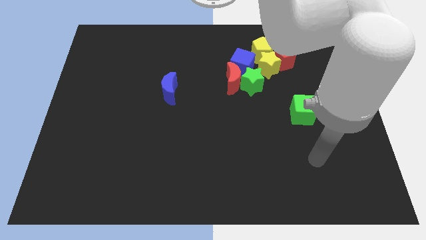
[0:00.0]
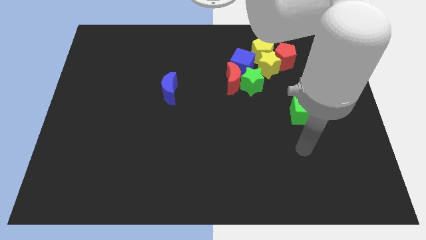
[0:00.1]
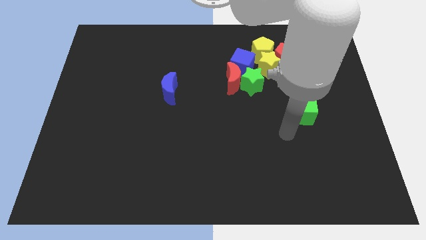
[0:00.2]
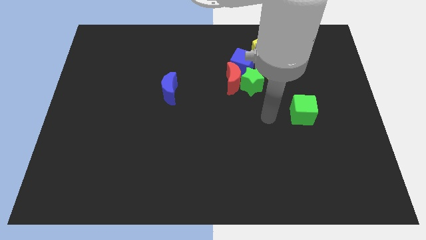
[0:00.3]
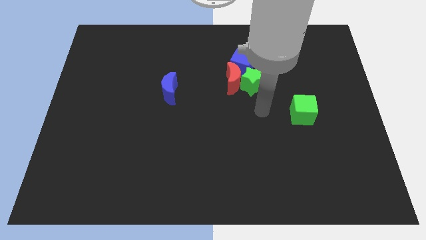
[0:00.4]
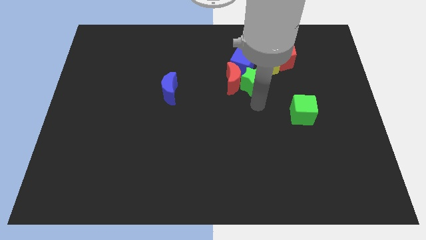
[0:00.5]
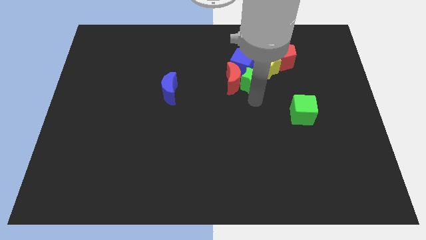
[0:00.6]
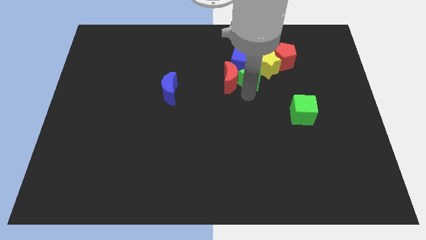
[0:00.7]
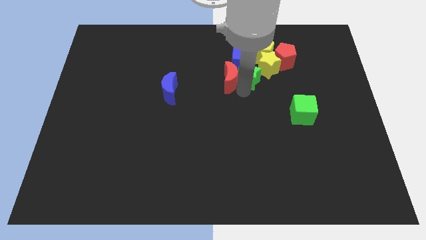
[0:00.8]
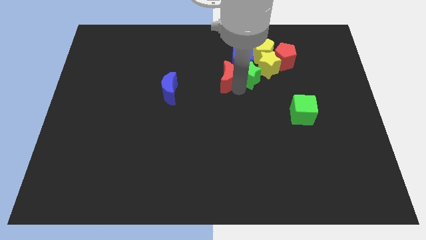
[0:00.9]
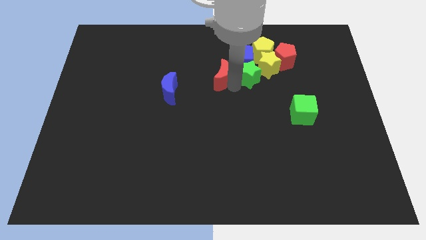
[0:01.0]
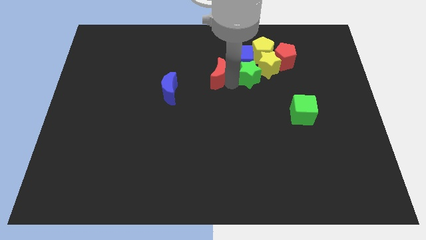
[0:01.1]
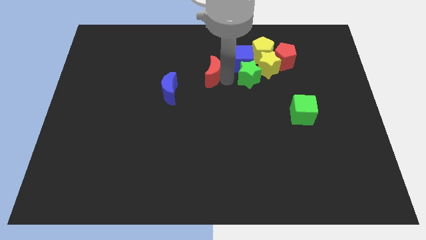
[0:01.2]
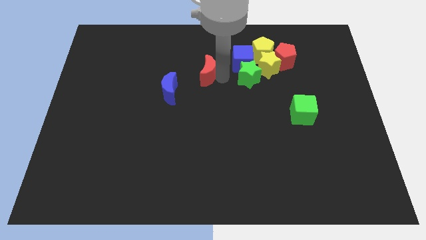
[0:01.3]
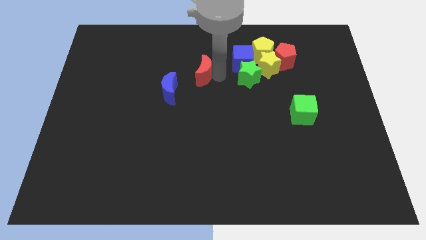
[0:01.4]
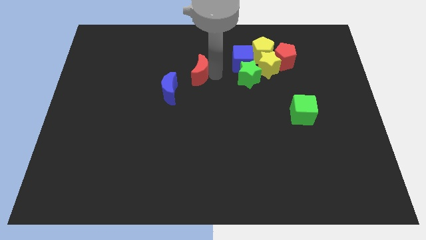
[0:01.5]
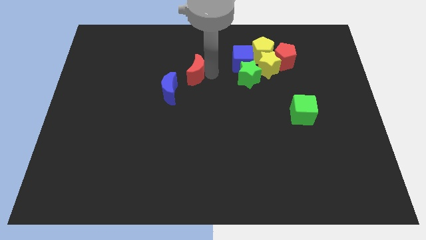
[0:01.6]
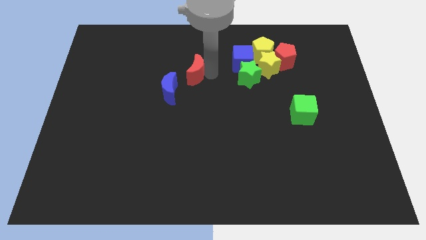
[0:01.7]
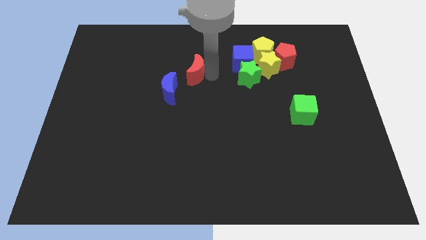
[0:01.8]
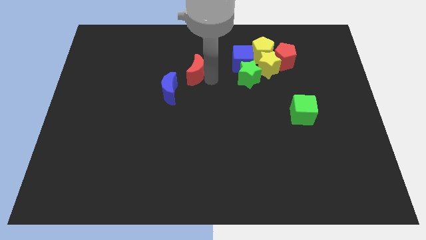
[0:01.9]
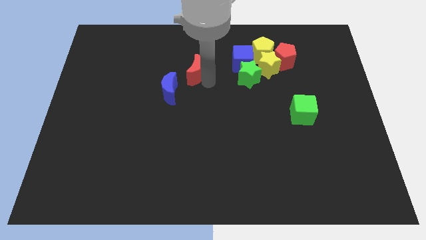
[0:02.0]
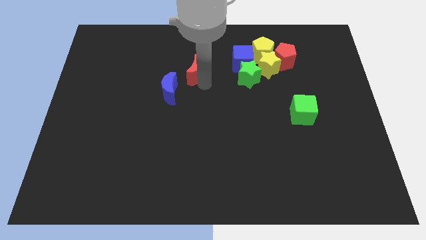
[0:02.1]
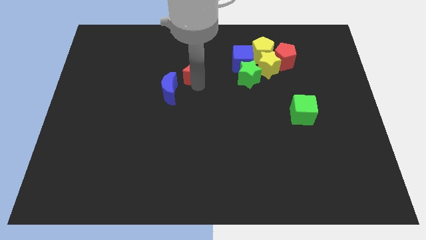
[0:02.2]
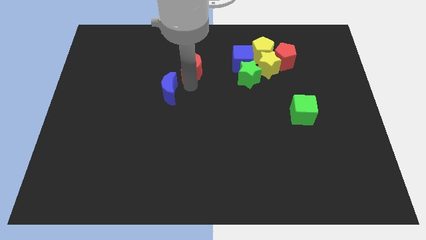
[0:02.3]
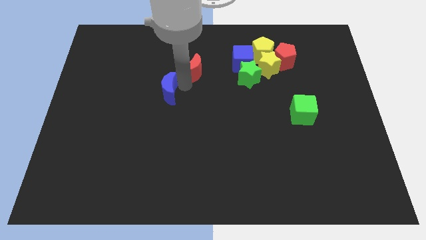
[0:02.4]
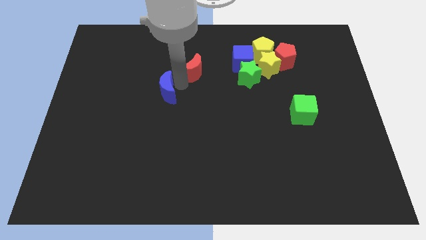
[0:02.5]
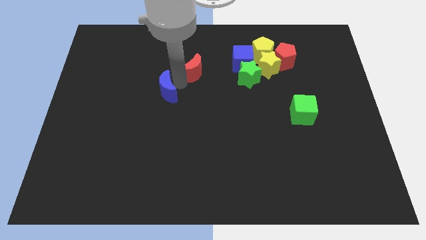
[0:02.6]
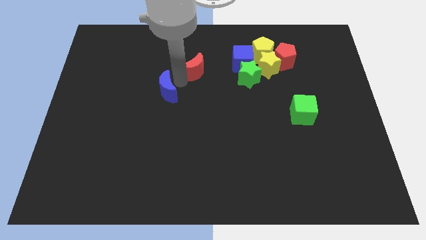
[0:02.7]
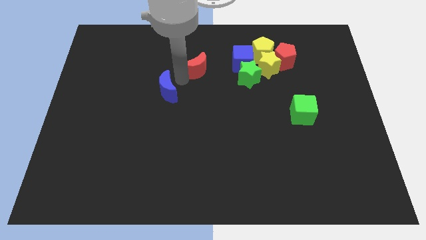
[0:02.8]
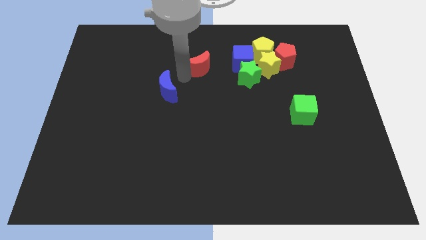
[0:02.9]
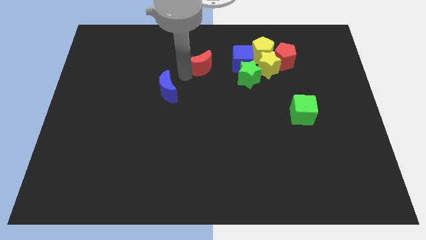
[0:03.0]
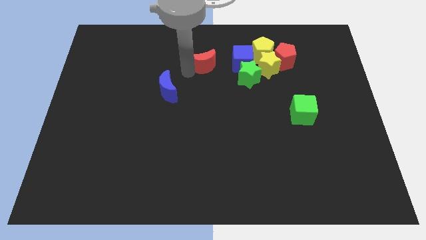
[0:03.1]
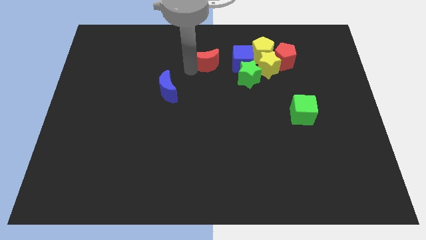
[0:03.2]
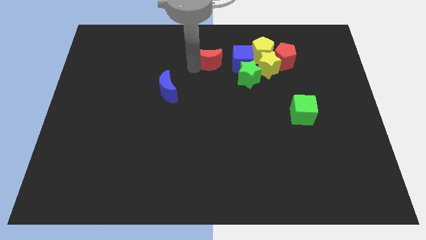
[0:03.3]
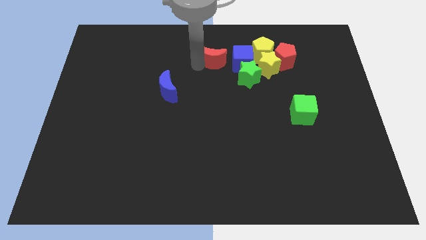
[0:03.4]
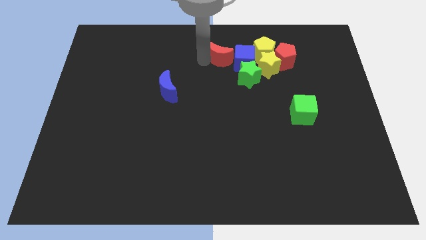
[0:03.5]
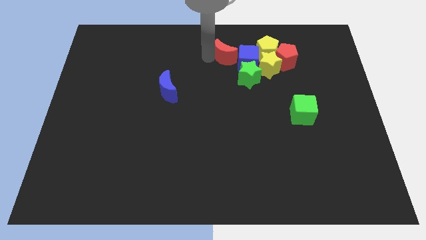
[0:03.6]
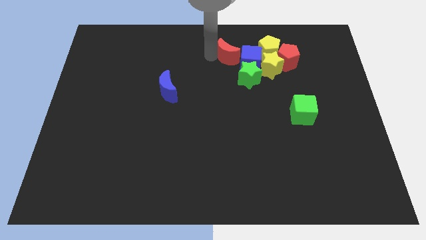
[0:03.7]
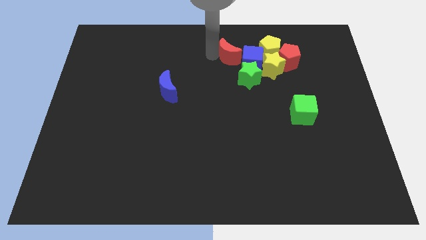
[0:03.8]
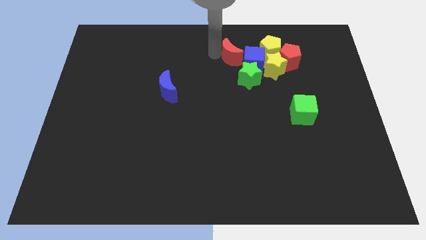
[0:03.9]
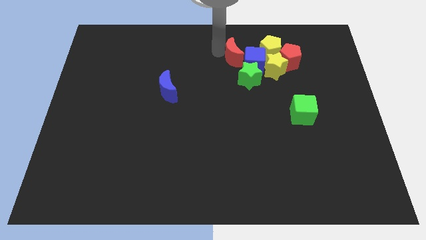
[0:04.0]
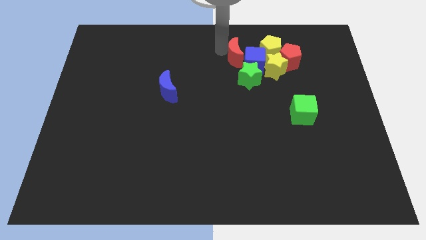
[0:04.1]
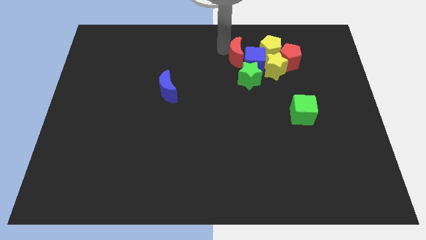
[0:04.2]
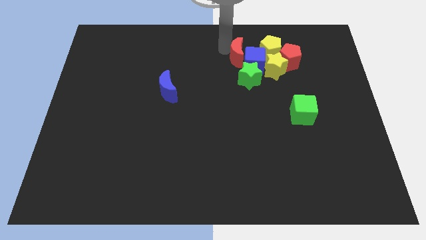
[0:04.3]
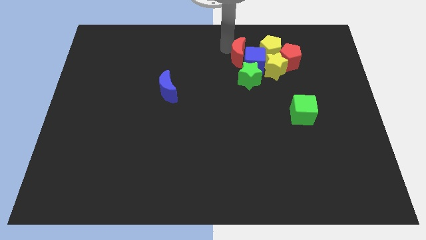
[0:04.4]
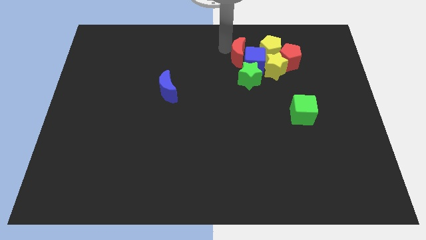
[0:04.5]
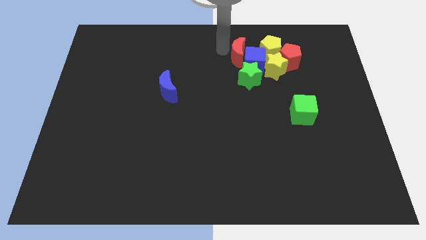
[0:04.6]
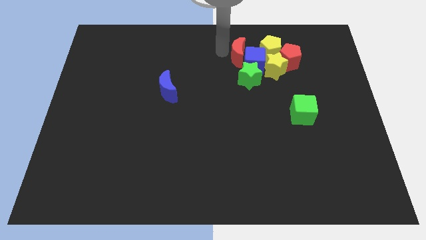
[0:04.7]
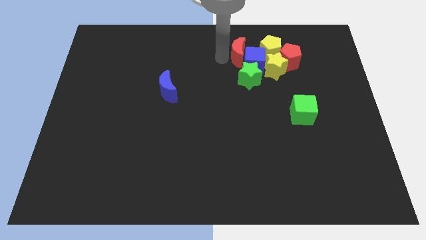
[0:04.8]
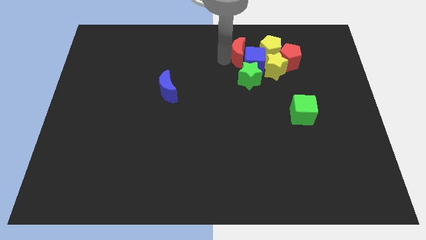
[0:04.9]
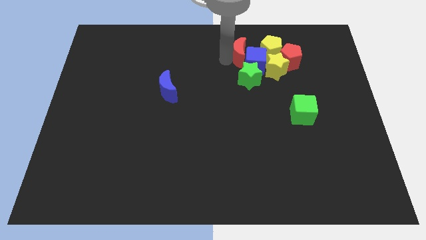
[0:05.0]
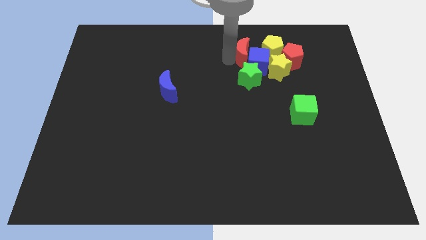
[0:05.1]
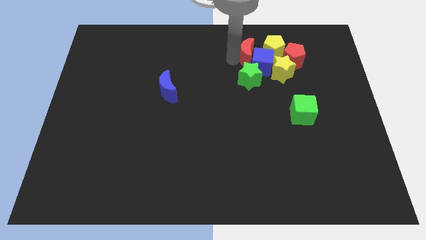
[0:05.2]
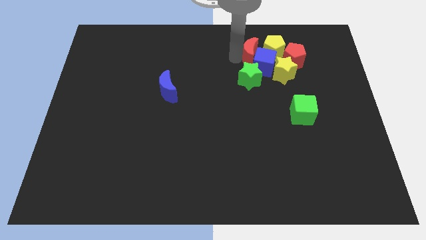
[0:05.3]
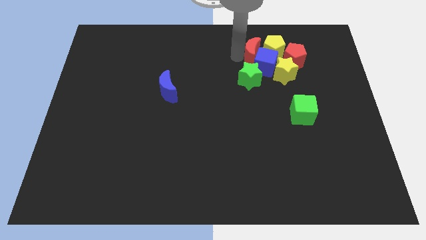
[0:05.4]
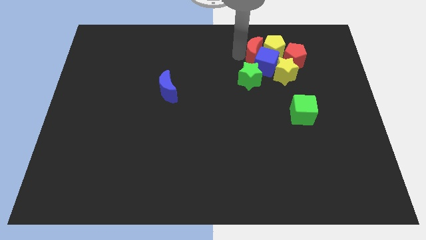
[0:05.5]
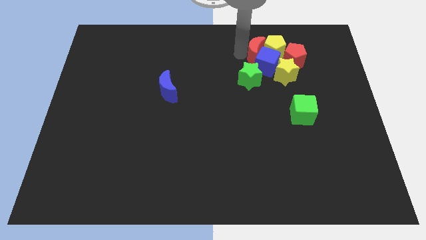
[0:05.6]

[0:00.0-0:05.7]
push the red moon towards the yellow pentagon

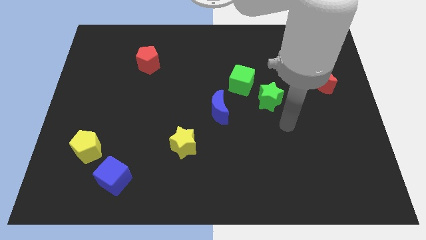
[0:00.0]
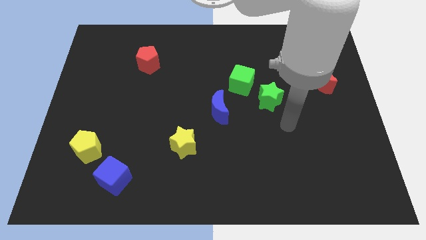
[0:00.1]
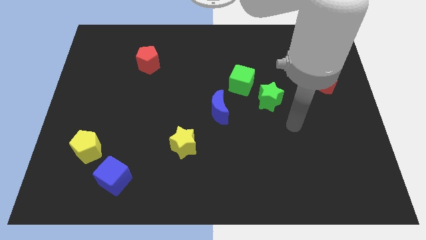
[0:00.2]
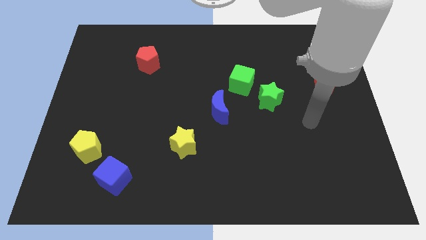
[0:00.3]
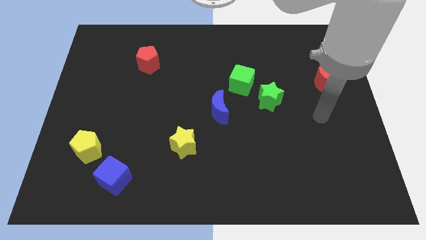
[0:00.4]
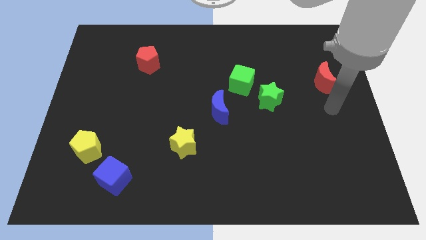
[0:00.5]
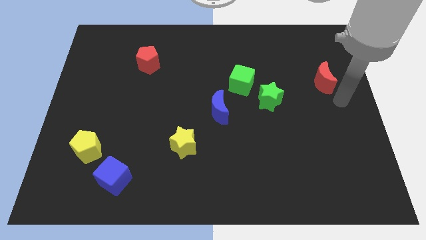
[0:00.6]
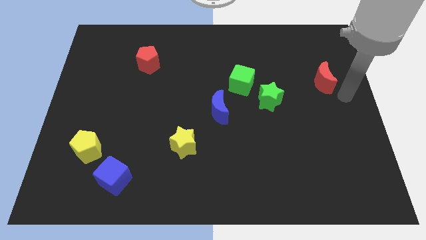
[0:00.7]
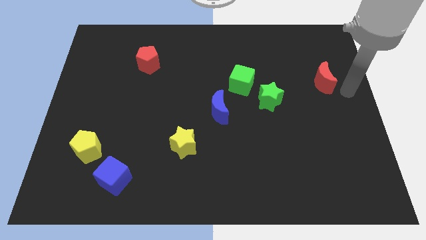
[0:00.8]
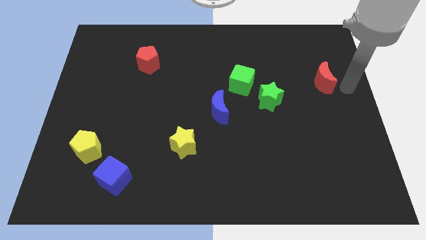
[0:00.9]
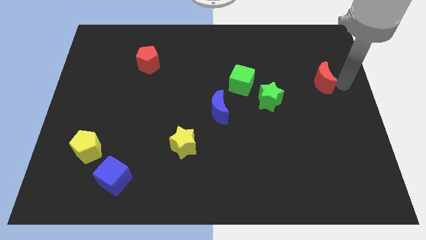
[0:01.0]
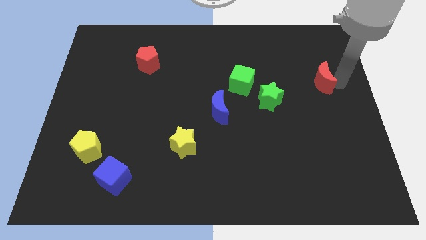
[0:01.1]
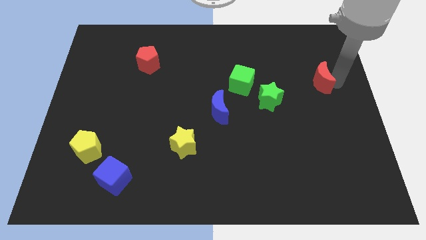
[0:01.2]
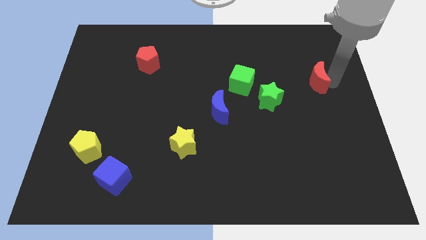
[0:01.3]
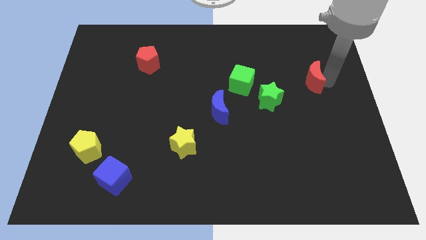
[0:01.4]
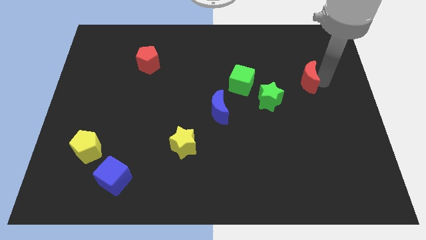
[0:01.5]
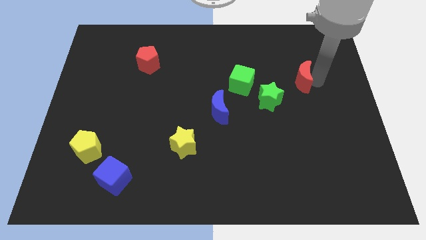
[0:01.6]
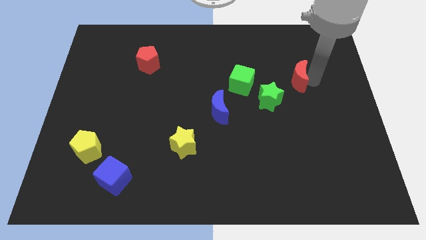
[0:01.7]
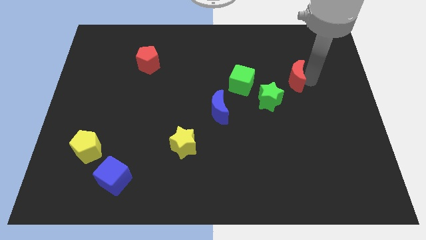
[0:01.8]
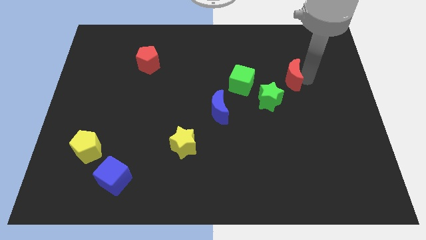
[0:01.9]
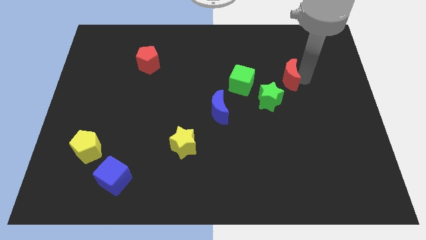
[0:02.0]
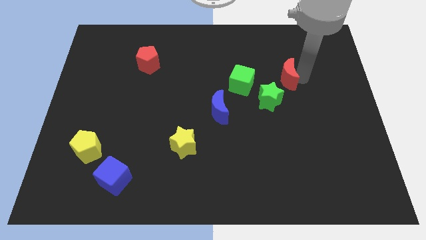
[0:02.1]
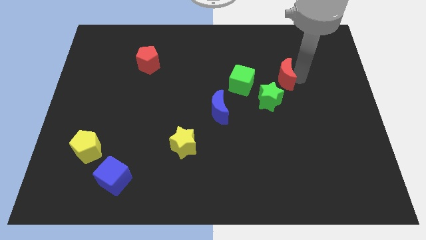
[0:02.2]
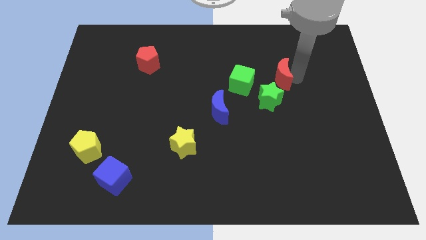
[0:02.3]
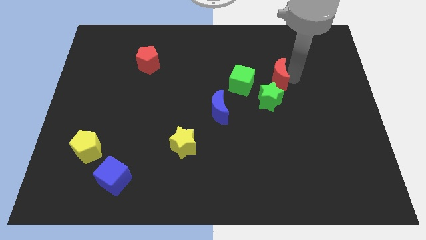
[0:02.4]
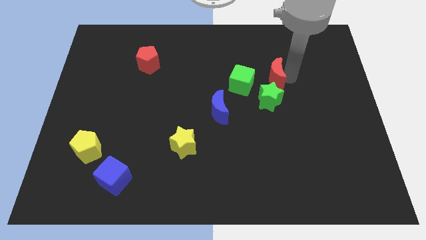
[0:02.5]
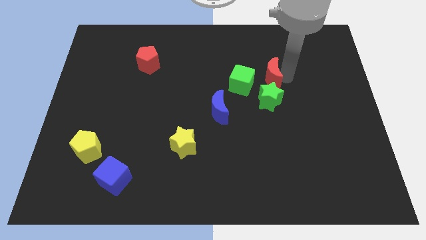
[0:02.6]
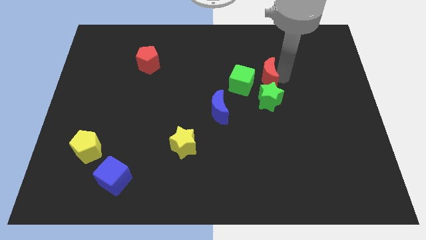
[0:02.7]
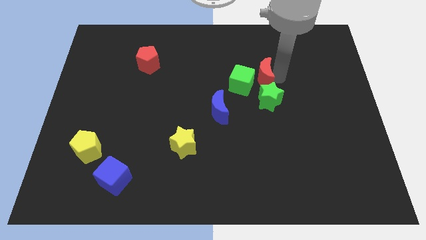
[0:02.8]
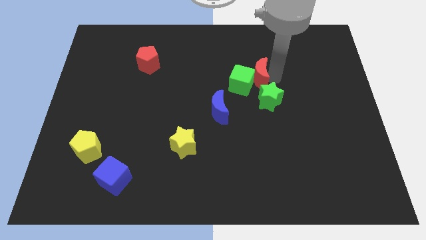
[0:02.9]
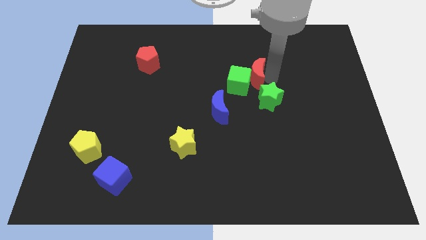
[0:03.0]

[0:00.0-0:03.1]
move the red moon to the green cube
